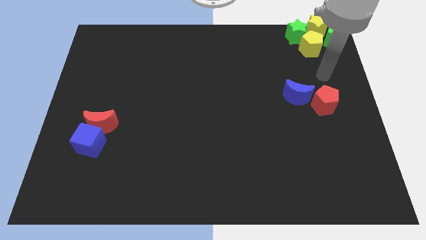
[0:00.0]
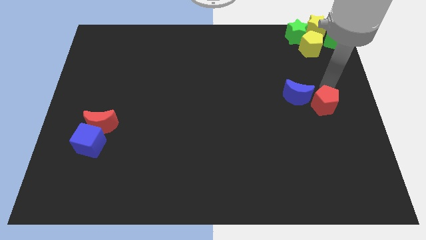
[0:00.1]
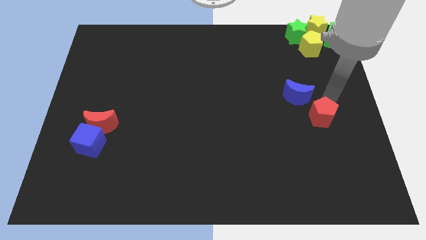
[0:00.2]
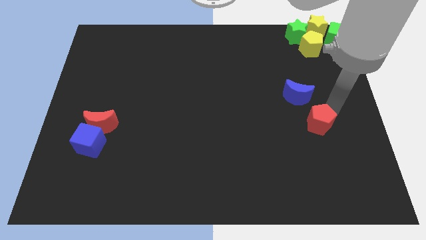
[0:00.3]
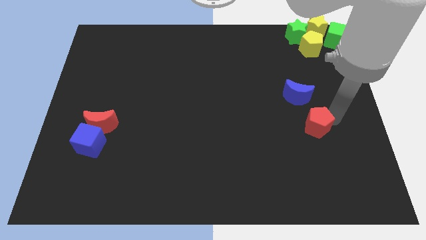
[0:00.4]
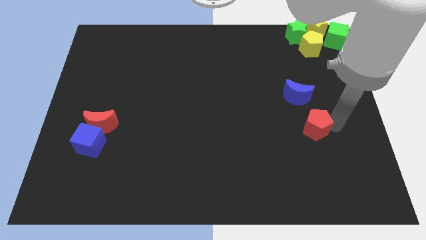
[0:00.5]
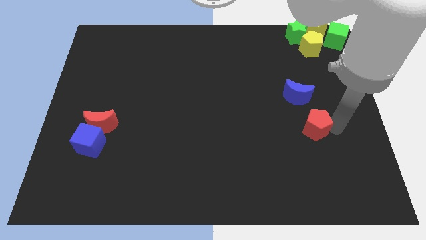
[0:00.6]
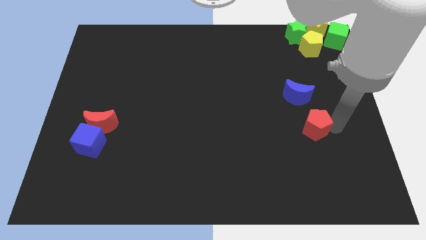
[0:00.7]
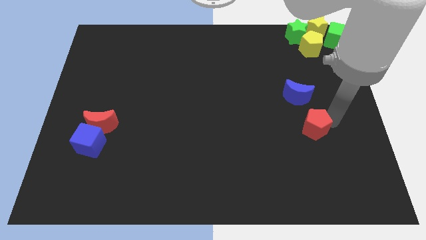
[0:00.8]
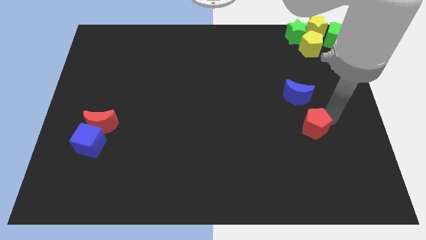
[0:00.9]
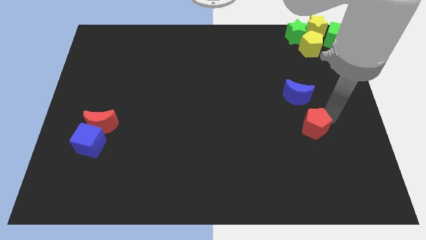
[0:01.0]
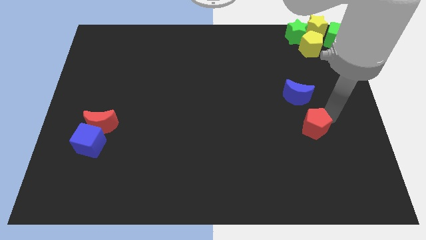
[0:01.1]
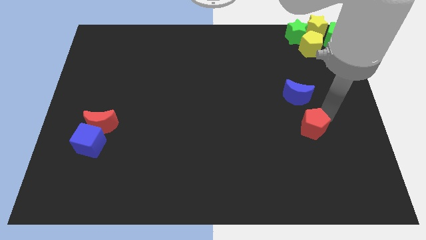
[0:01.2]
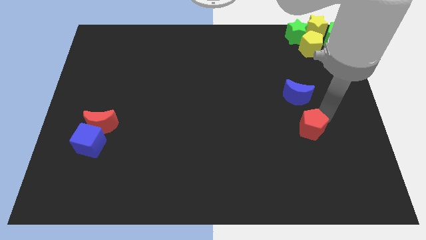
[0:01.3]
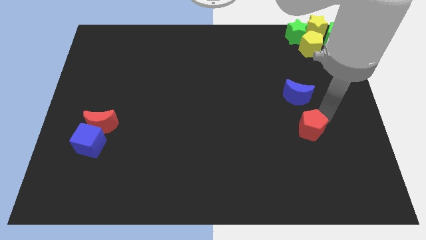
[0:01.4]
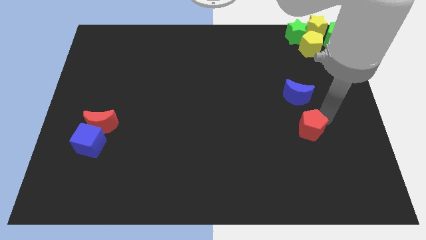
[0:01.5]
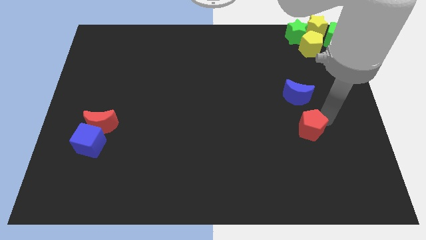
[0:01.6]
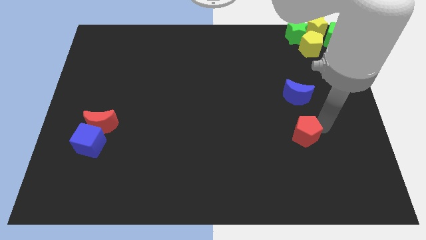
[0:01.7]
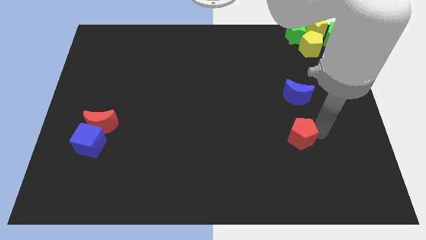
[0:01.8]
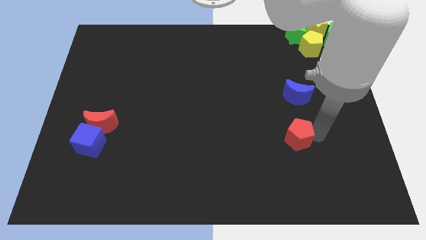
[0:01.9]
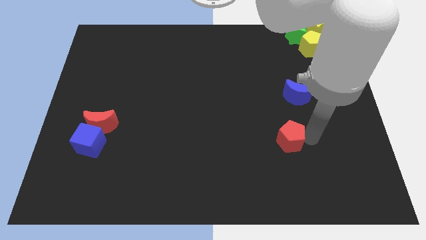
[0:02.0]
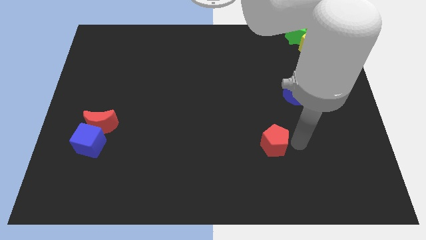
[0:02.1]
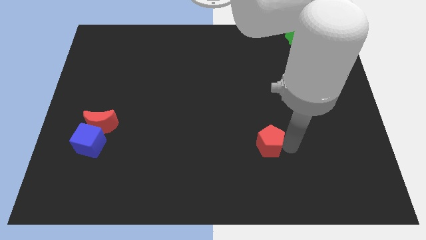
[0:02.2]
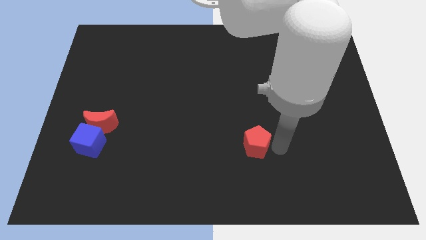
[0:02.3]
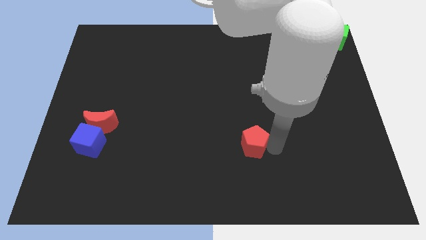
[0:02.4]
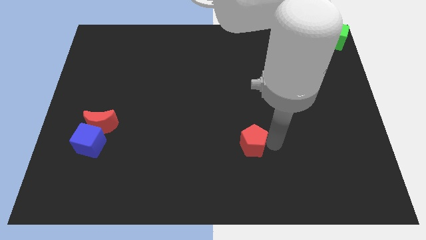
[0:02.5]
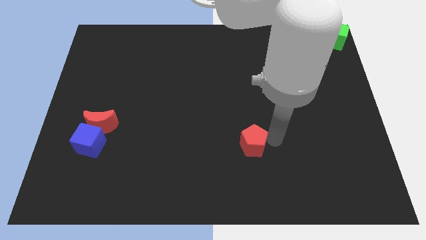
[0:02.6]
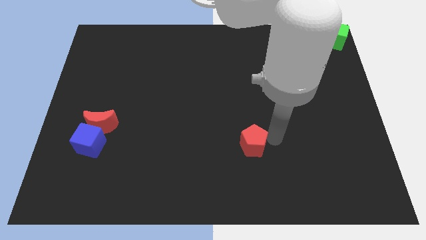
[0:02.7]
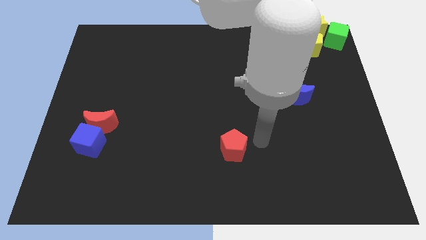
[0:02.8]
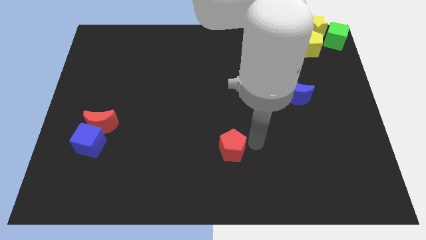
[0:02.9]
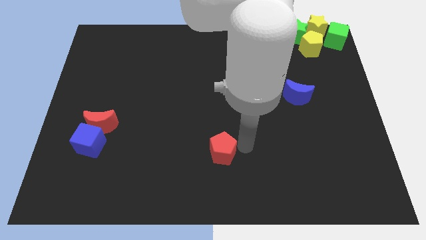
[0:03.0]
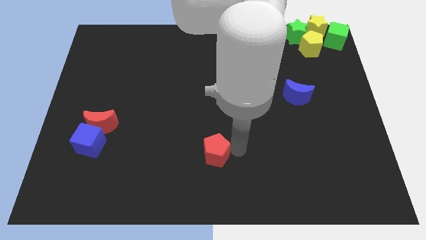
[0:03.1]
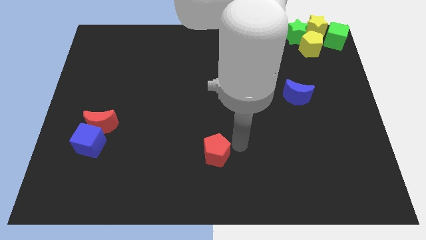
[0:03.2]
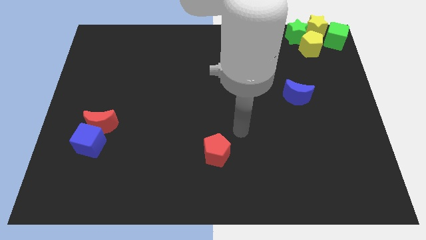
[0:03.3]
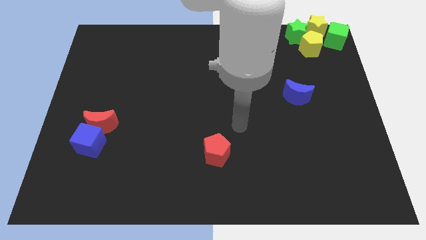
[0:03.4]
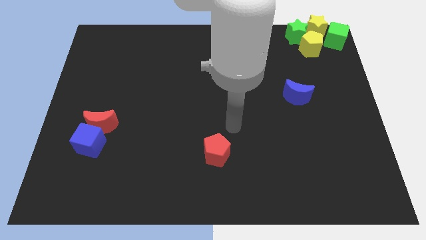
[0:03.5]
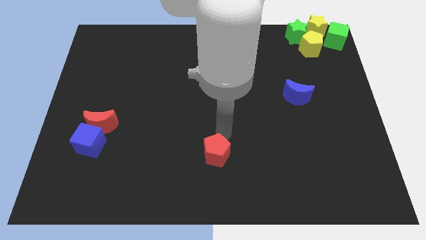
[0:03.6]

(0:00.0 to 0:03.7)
push the red pentagon towards the bottom center

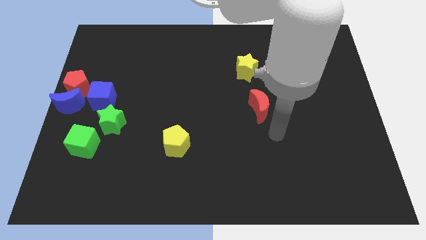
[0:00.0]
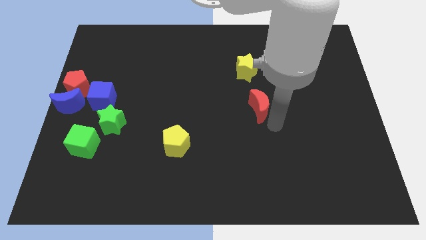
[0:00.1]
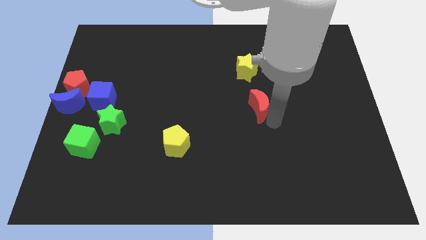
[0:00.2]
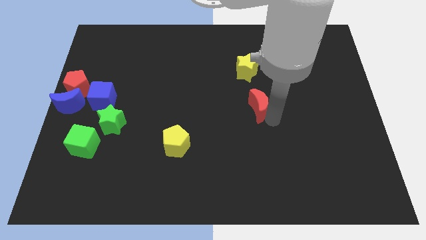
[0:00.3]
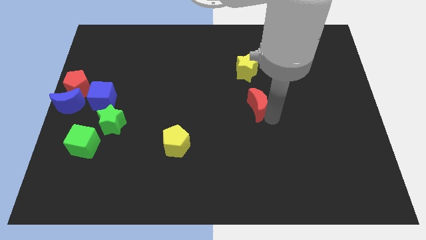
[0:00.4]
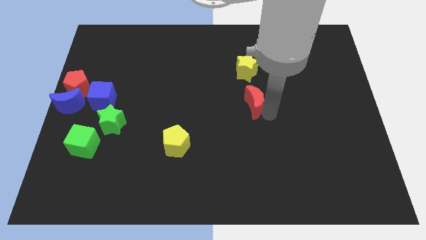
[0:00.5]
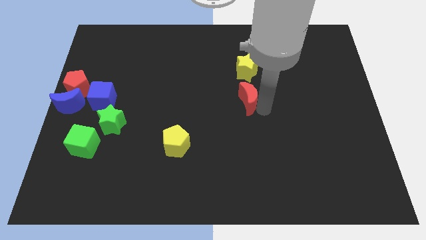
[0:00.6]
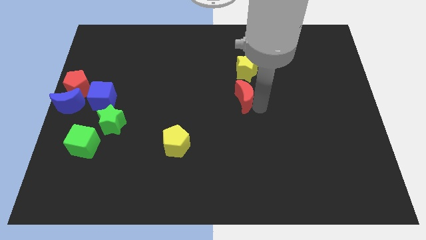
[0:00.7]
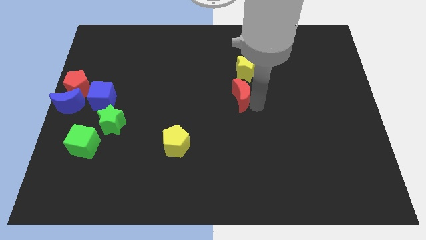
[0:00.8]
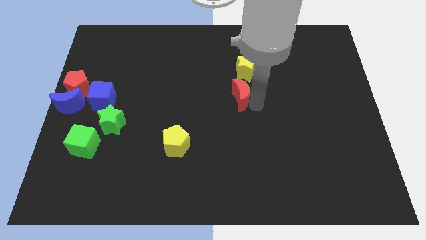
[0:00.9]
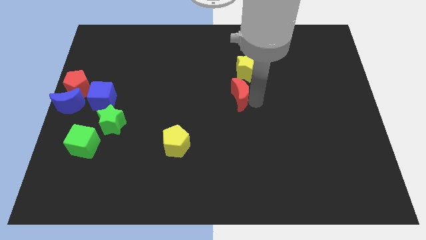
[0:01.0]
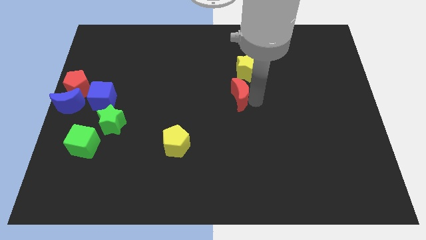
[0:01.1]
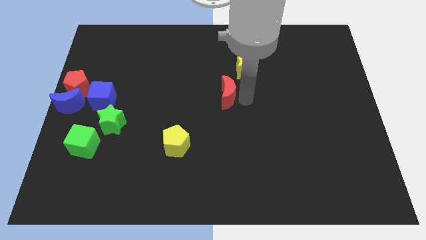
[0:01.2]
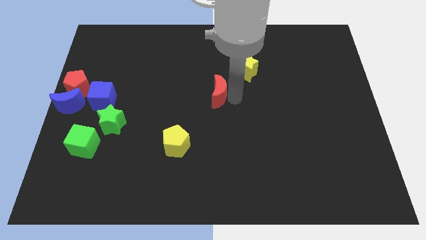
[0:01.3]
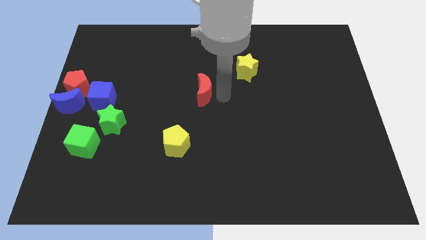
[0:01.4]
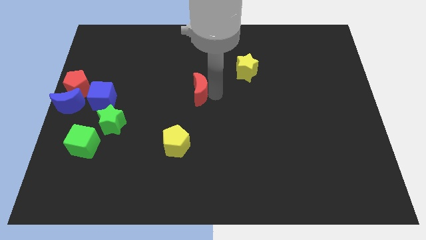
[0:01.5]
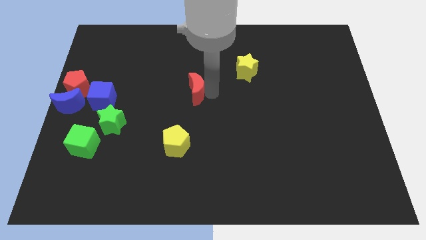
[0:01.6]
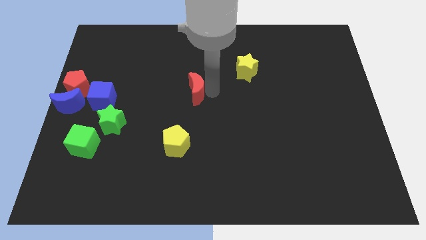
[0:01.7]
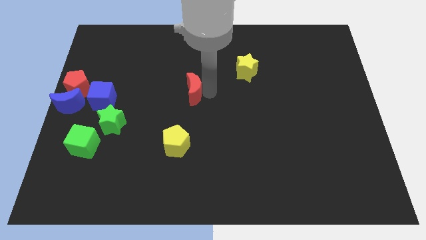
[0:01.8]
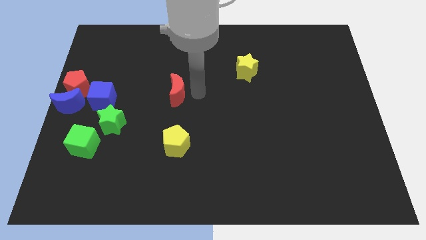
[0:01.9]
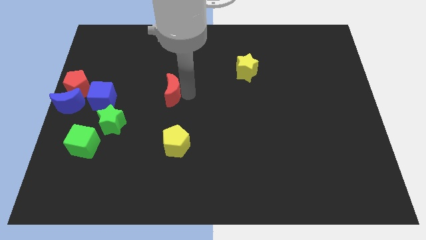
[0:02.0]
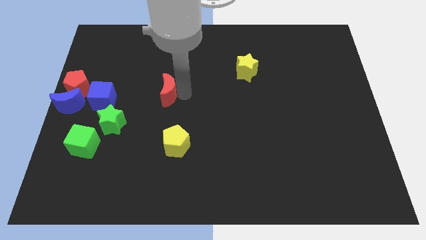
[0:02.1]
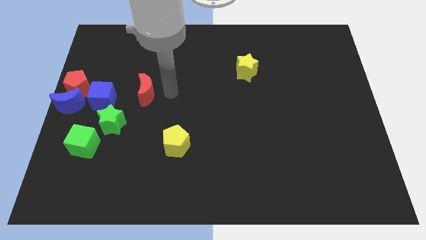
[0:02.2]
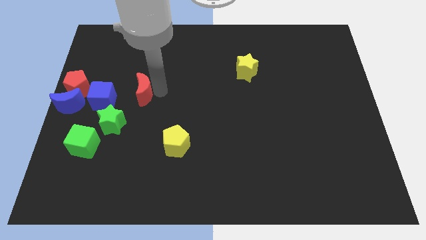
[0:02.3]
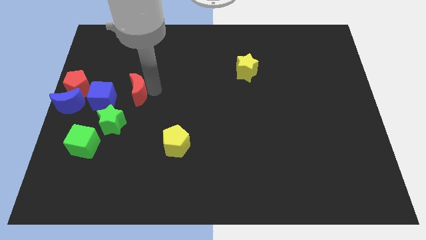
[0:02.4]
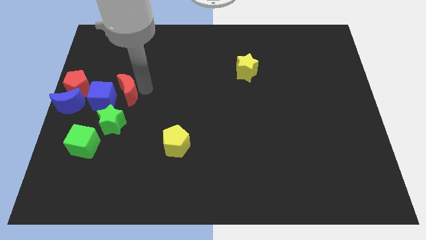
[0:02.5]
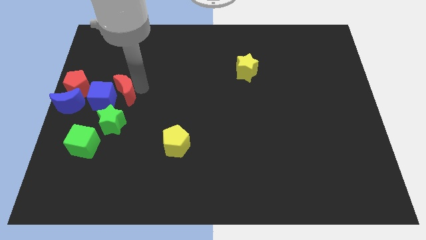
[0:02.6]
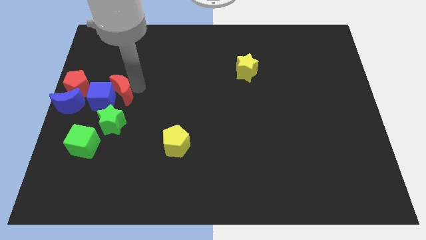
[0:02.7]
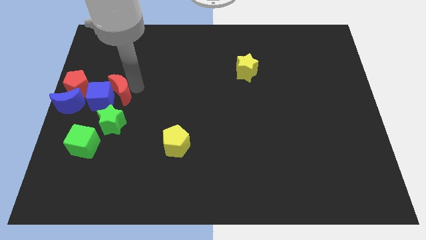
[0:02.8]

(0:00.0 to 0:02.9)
push the red moon into the blue cube

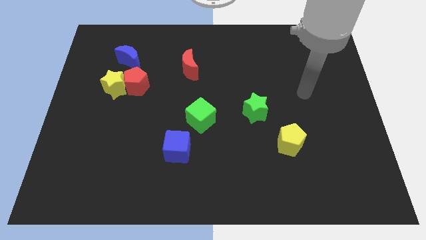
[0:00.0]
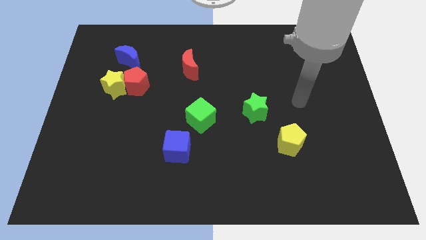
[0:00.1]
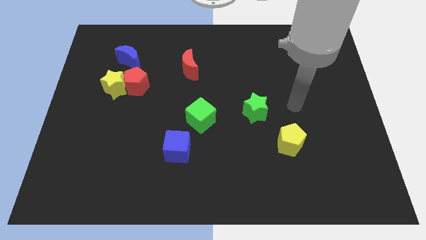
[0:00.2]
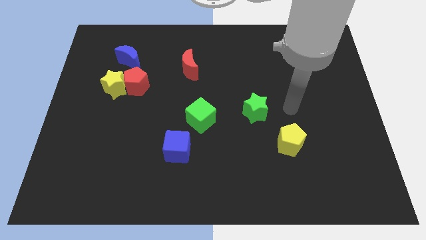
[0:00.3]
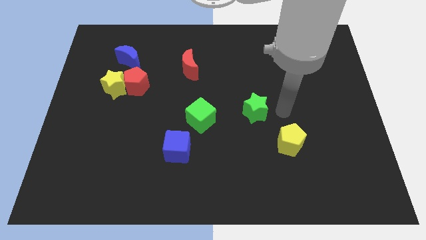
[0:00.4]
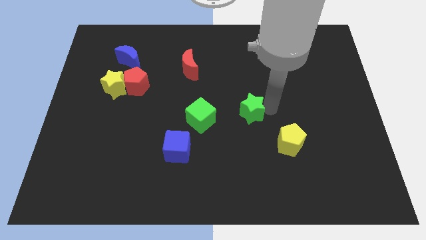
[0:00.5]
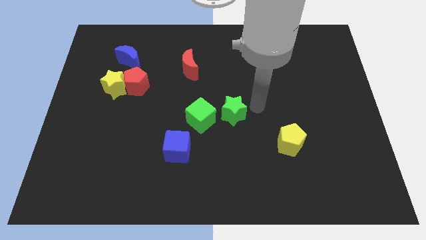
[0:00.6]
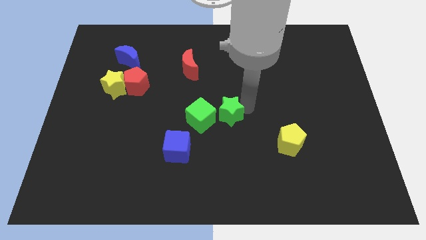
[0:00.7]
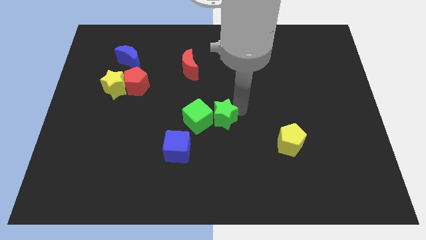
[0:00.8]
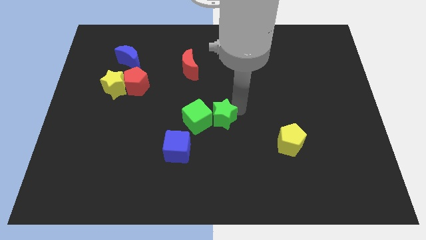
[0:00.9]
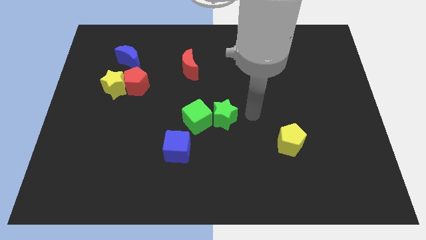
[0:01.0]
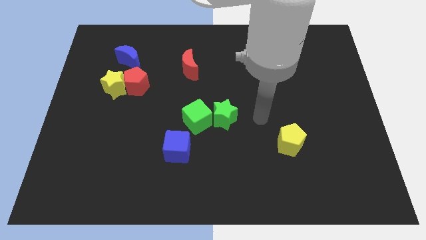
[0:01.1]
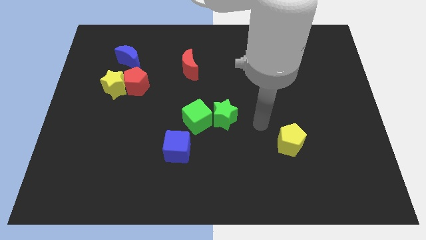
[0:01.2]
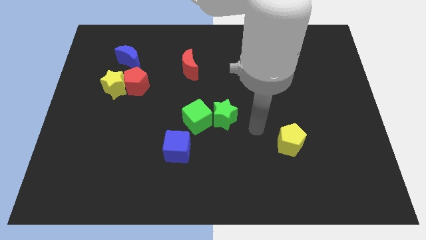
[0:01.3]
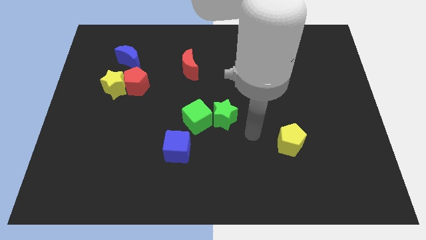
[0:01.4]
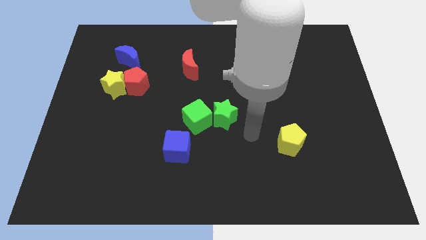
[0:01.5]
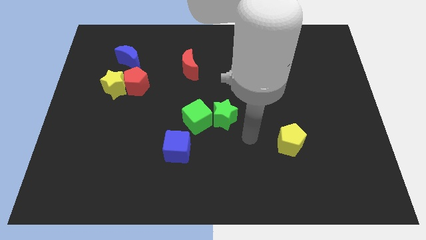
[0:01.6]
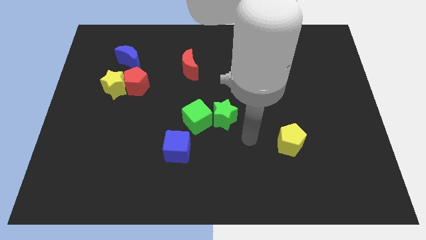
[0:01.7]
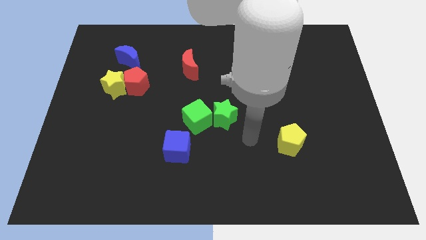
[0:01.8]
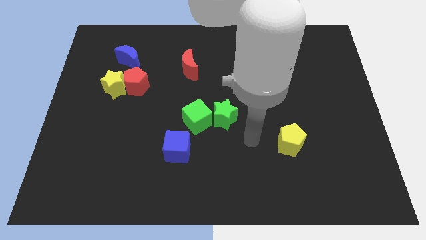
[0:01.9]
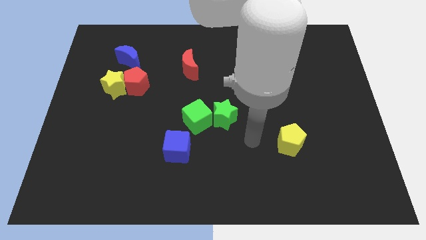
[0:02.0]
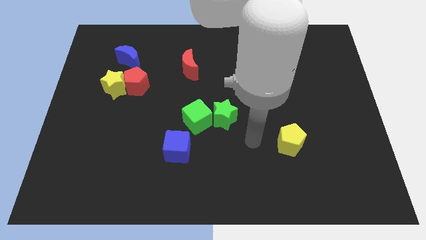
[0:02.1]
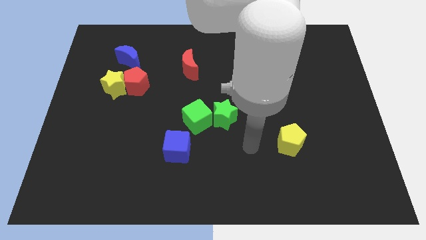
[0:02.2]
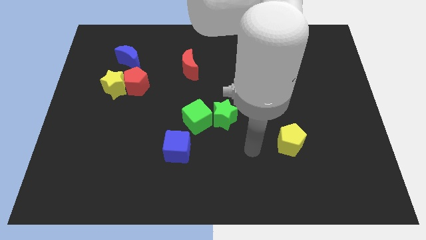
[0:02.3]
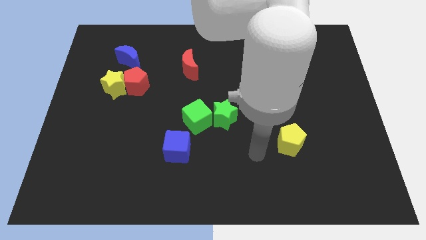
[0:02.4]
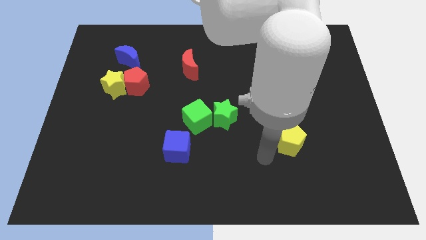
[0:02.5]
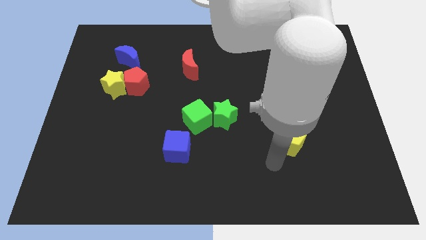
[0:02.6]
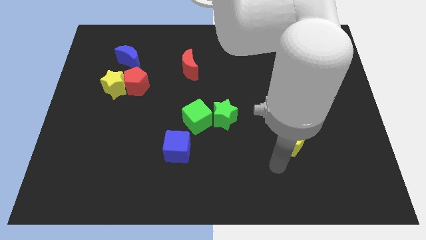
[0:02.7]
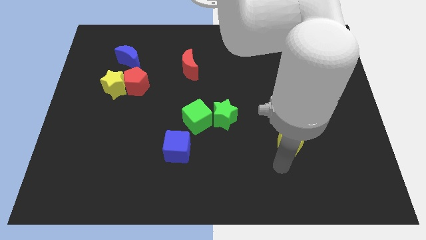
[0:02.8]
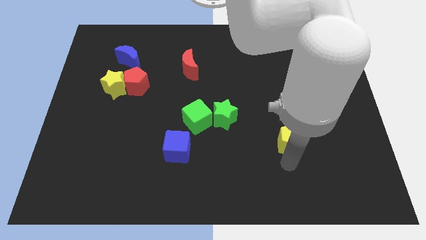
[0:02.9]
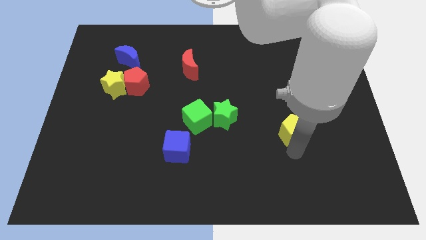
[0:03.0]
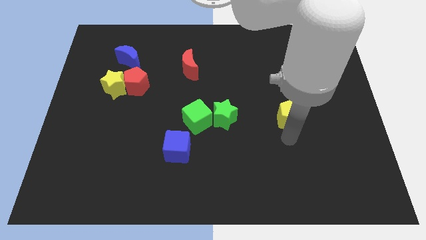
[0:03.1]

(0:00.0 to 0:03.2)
move the green star and yellow pentagon to the right side of the green cube
